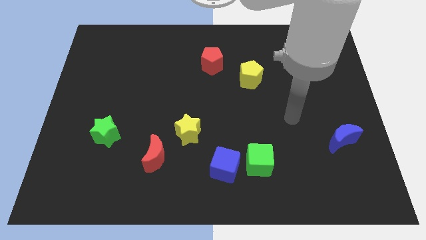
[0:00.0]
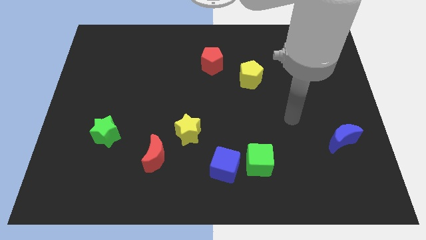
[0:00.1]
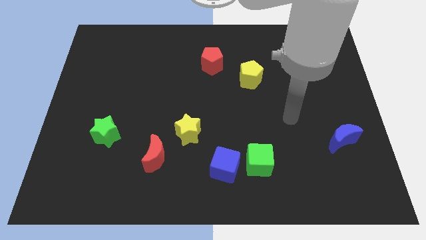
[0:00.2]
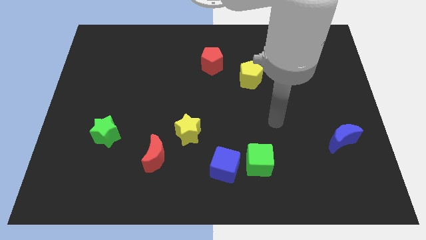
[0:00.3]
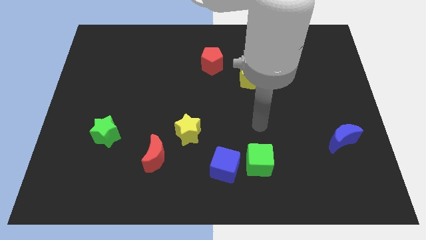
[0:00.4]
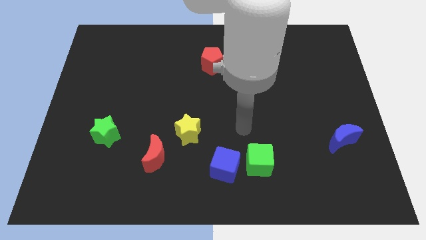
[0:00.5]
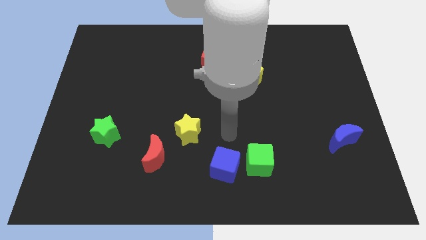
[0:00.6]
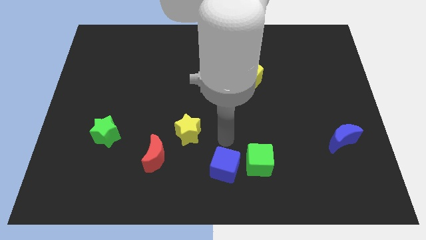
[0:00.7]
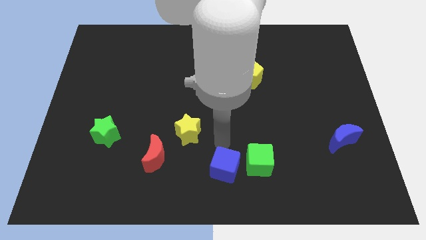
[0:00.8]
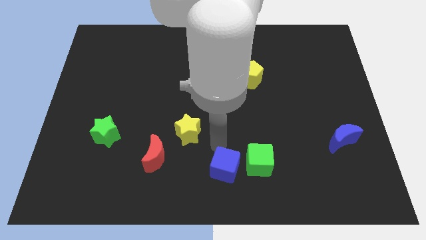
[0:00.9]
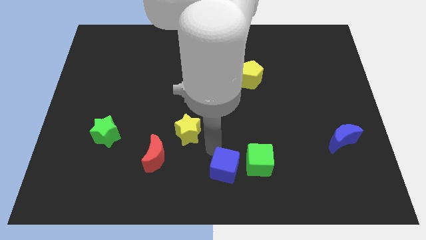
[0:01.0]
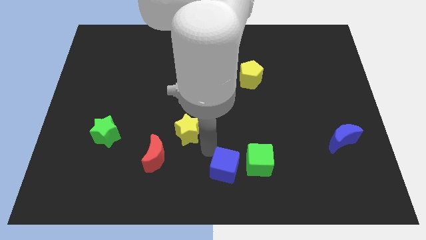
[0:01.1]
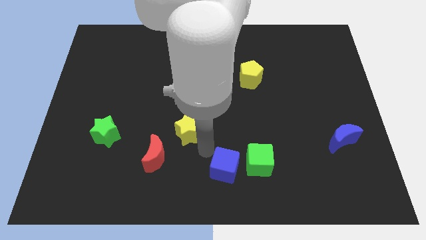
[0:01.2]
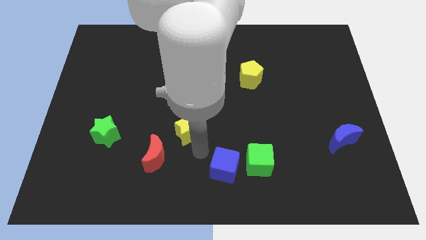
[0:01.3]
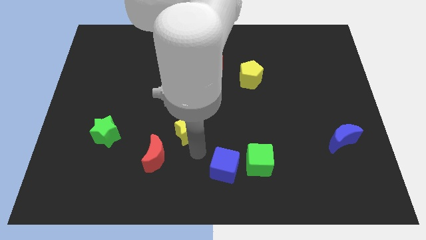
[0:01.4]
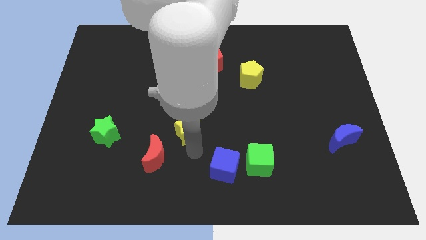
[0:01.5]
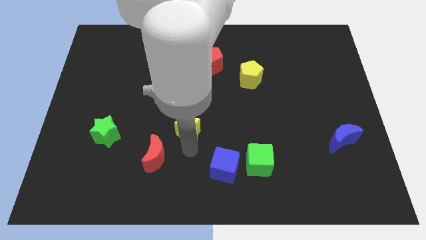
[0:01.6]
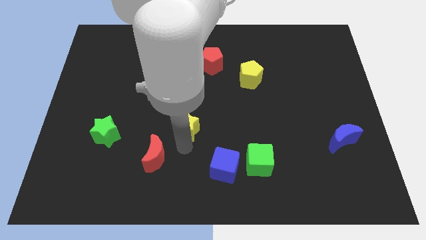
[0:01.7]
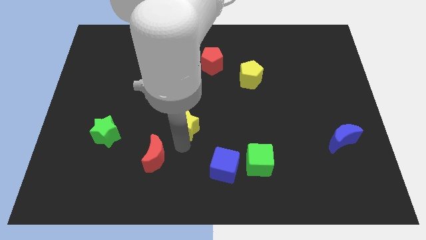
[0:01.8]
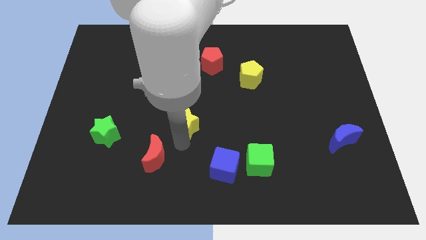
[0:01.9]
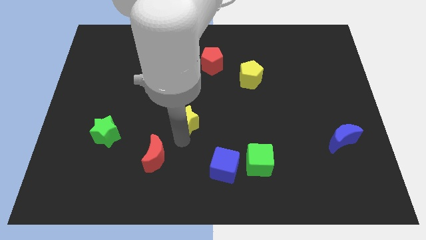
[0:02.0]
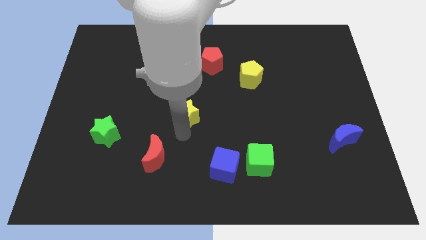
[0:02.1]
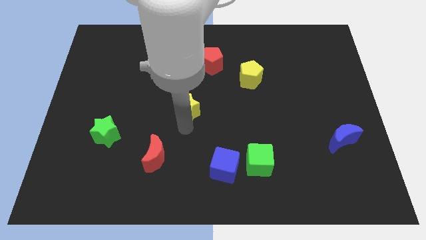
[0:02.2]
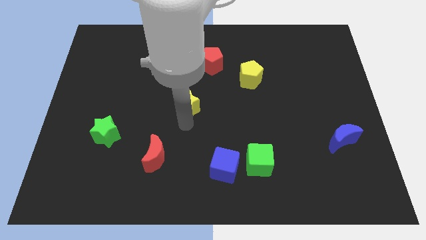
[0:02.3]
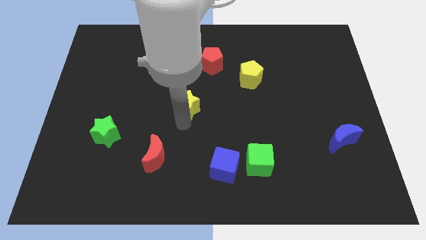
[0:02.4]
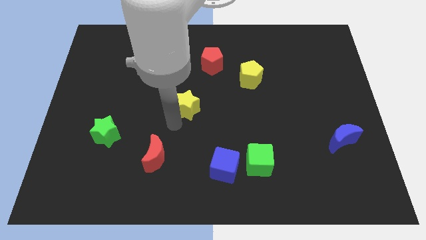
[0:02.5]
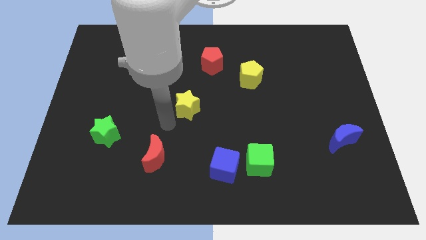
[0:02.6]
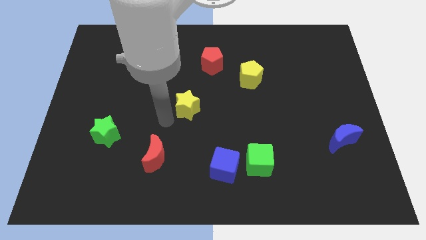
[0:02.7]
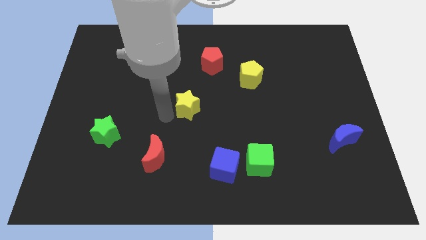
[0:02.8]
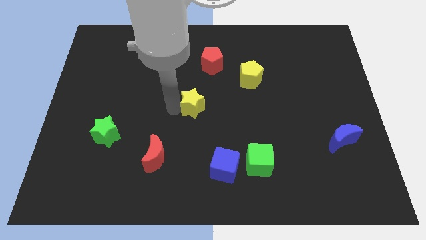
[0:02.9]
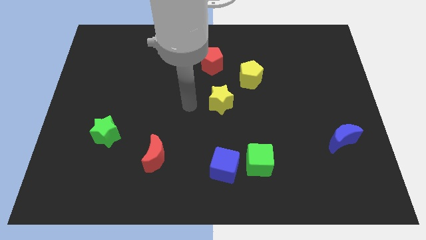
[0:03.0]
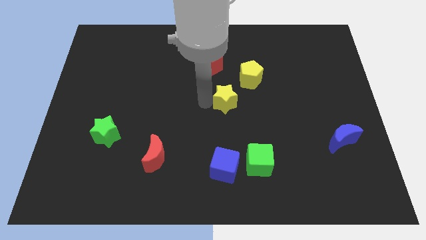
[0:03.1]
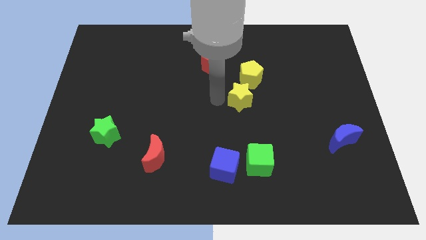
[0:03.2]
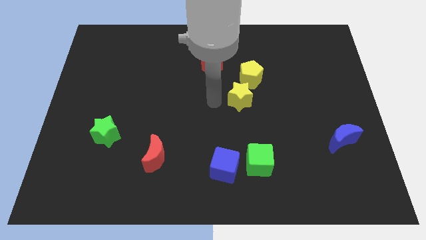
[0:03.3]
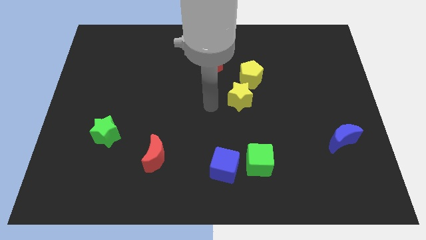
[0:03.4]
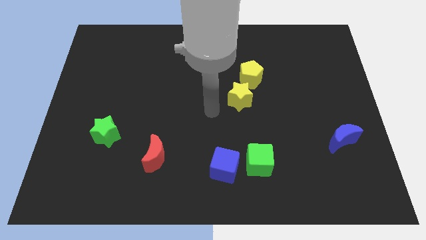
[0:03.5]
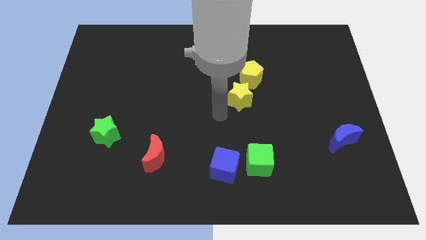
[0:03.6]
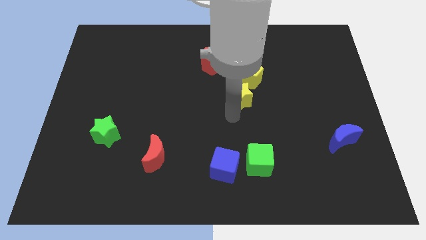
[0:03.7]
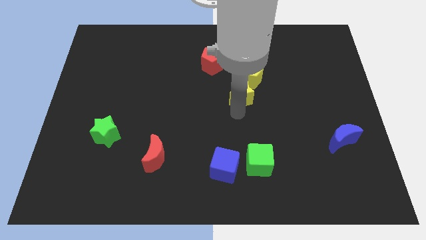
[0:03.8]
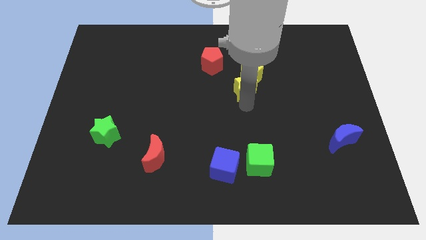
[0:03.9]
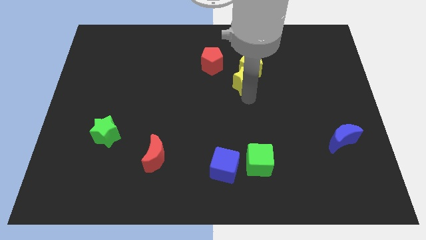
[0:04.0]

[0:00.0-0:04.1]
push the yellow star into the bottom side of the yellow pentagon

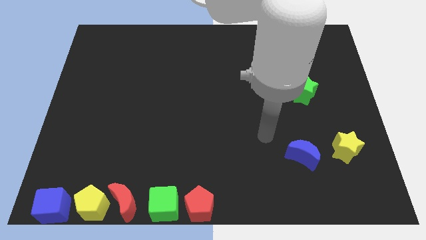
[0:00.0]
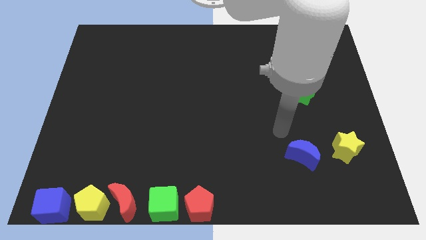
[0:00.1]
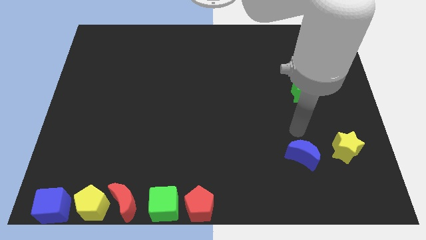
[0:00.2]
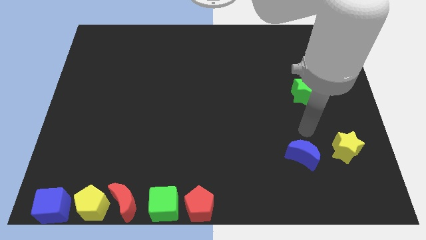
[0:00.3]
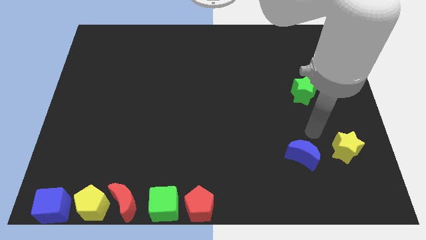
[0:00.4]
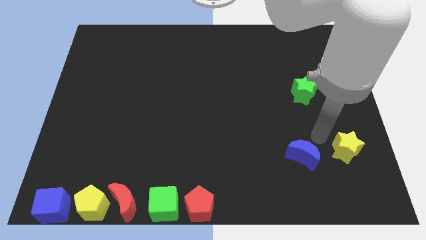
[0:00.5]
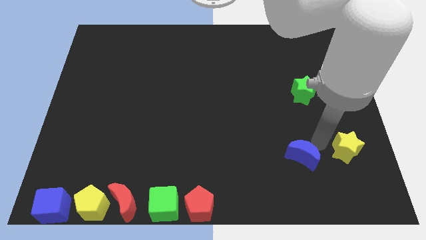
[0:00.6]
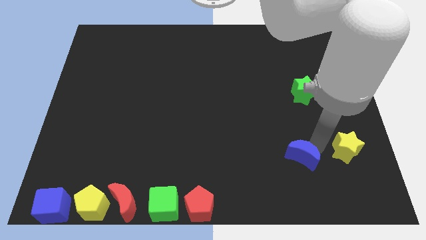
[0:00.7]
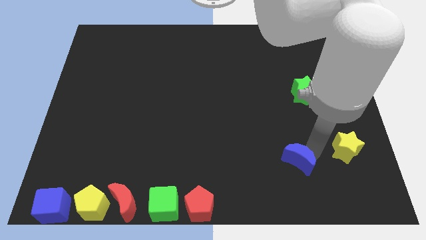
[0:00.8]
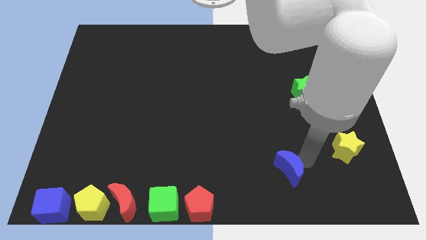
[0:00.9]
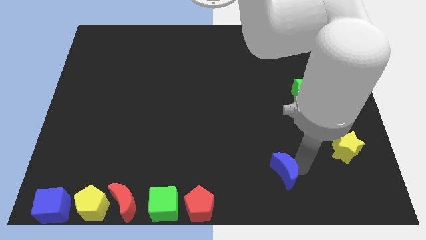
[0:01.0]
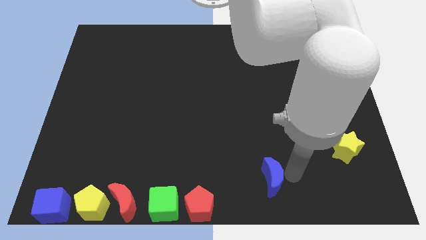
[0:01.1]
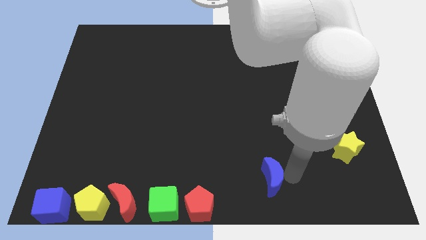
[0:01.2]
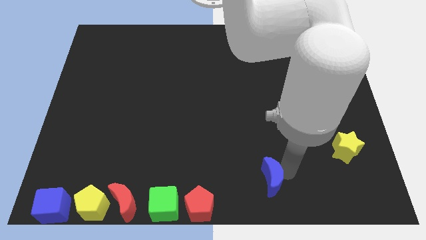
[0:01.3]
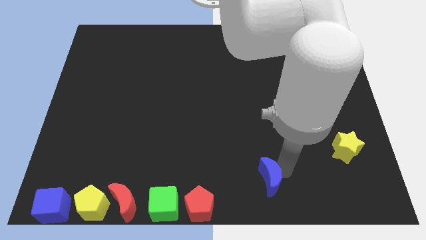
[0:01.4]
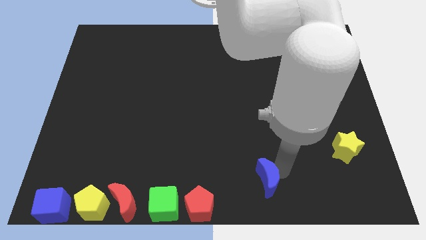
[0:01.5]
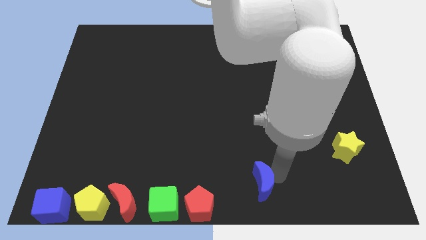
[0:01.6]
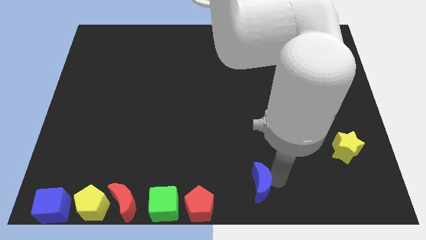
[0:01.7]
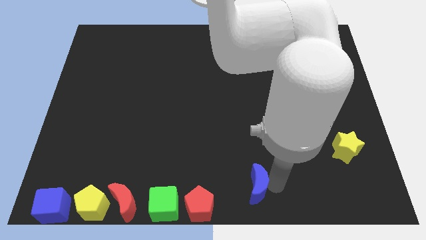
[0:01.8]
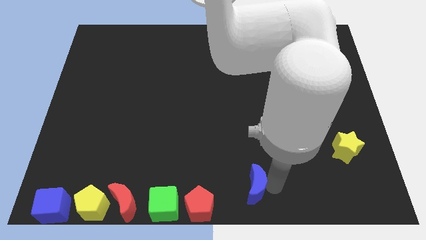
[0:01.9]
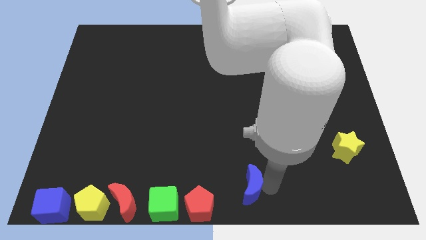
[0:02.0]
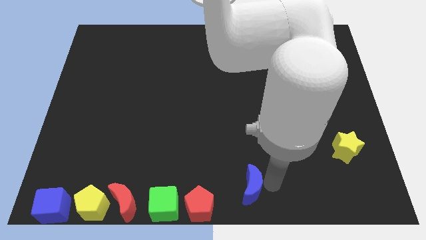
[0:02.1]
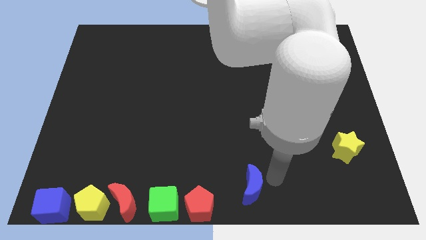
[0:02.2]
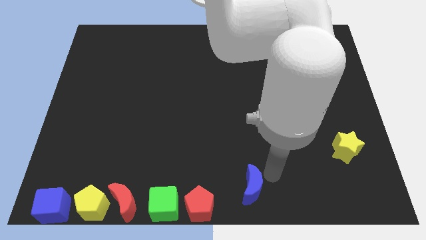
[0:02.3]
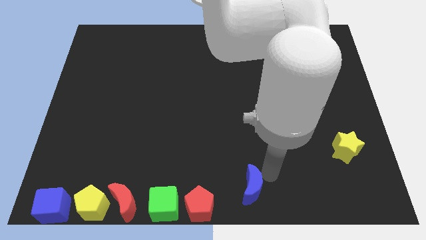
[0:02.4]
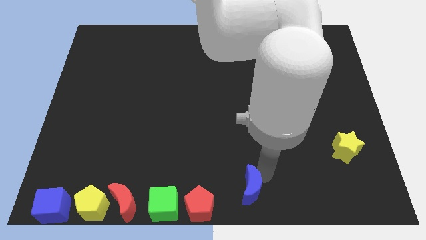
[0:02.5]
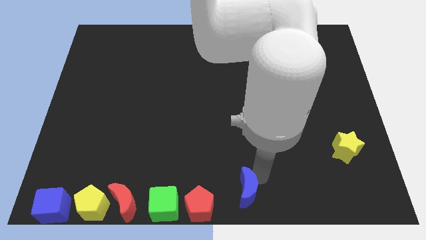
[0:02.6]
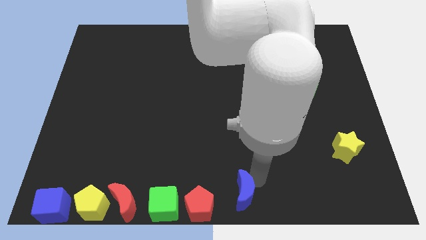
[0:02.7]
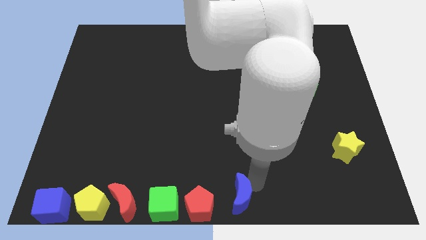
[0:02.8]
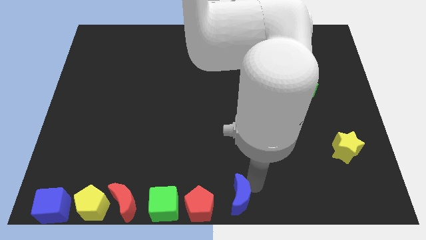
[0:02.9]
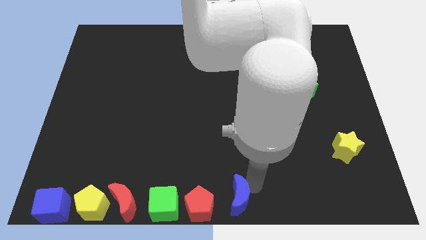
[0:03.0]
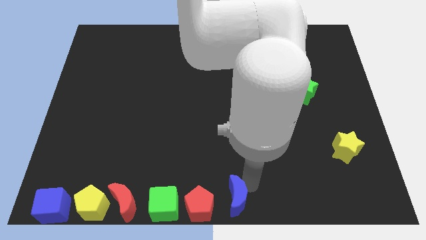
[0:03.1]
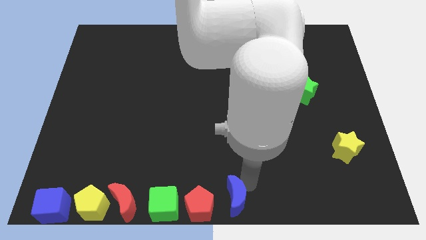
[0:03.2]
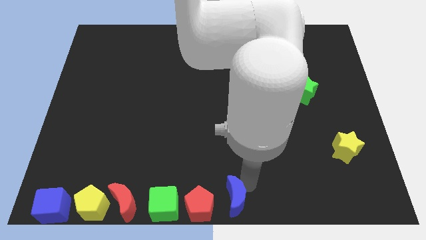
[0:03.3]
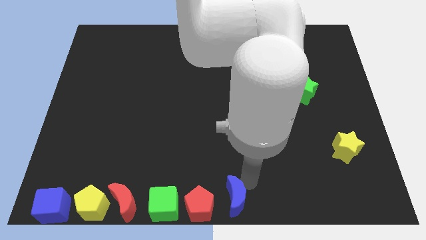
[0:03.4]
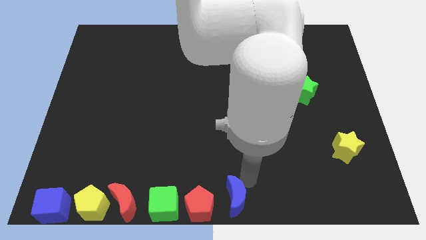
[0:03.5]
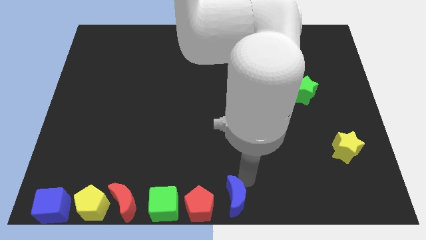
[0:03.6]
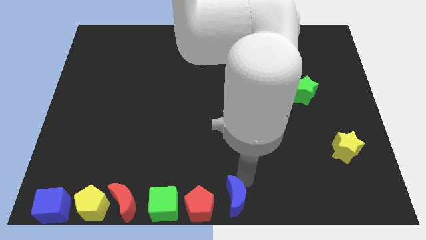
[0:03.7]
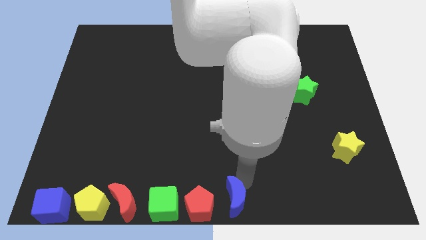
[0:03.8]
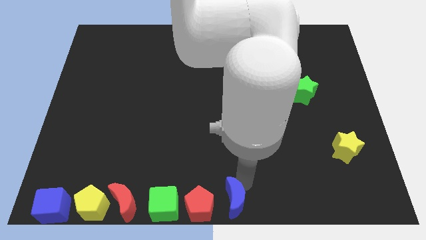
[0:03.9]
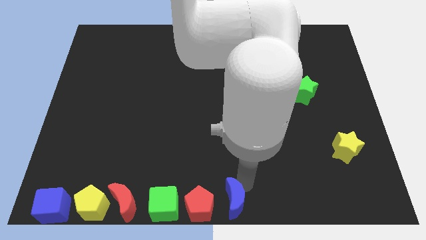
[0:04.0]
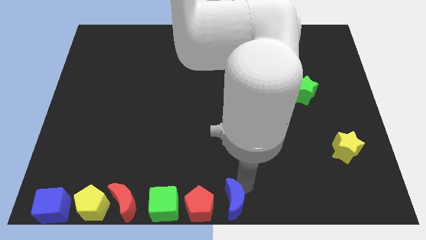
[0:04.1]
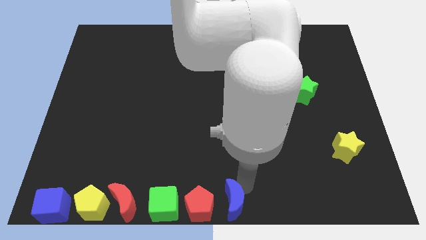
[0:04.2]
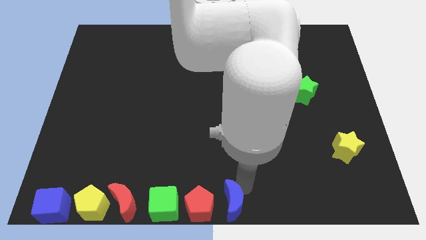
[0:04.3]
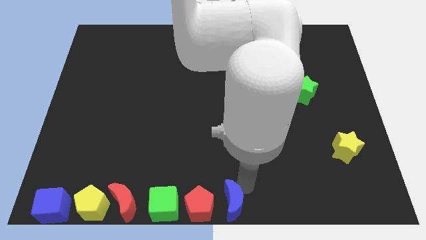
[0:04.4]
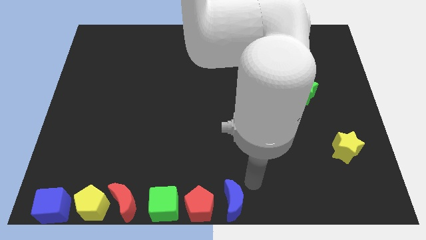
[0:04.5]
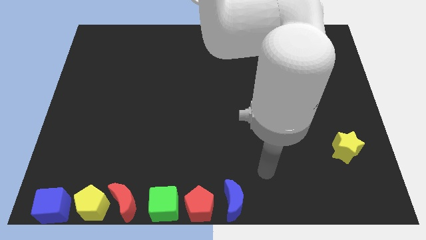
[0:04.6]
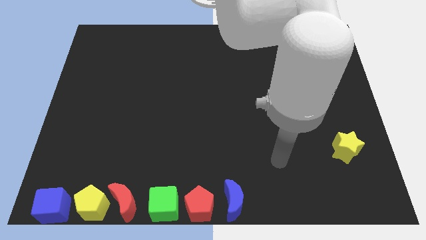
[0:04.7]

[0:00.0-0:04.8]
move the blue moon to the right side of the red pentagon
